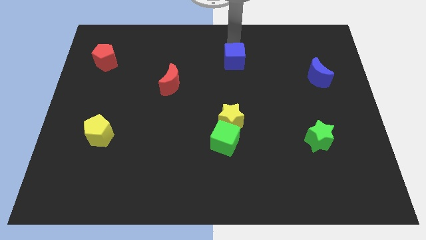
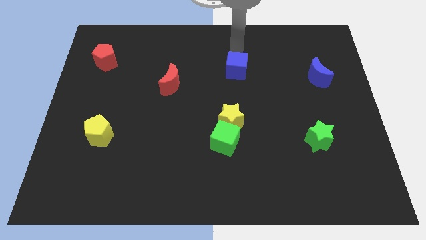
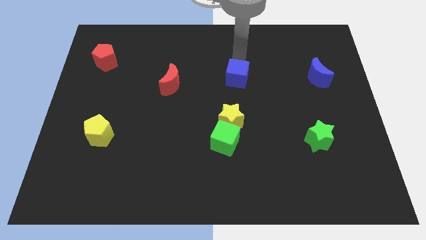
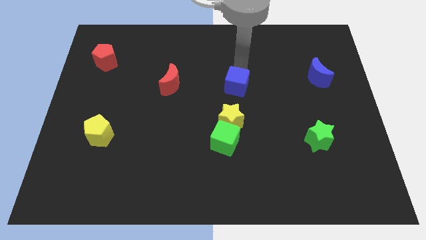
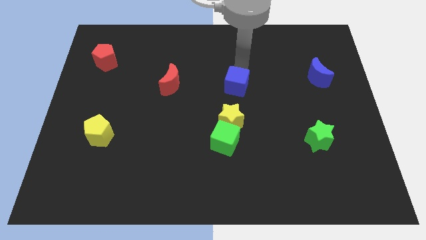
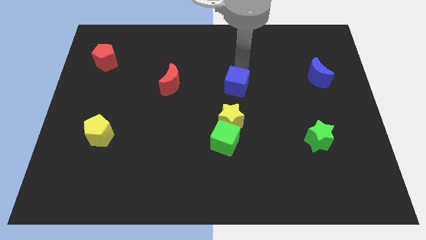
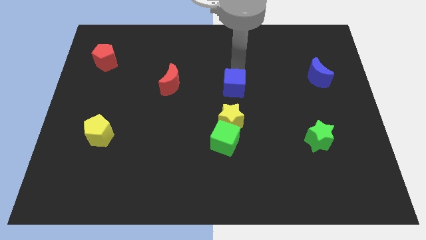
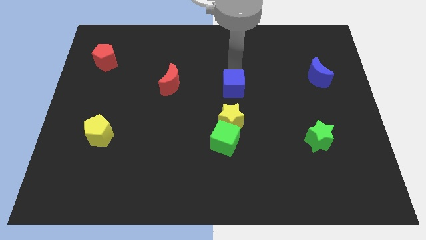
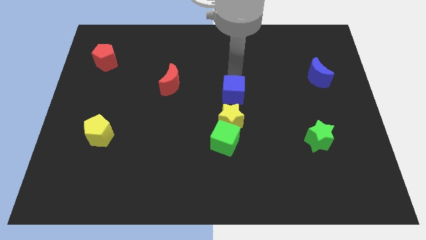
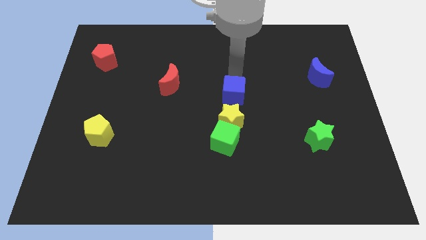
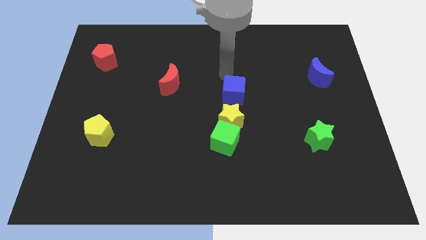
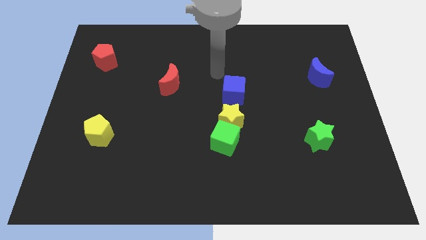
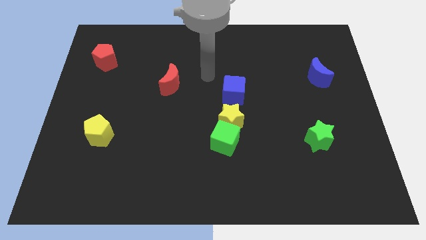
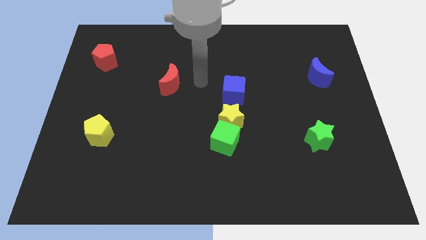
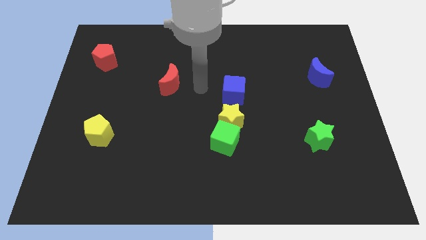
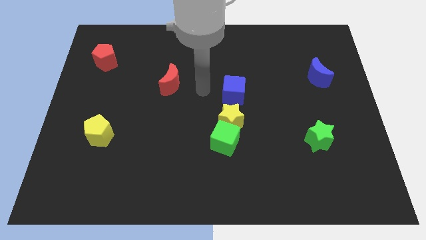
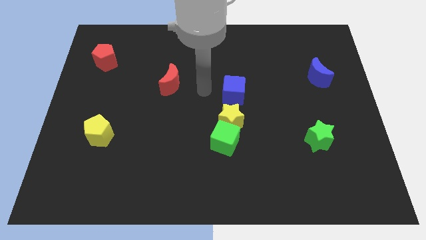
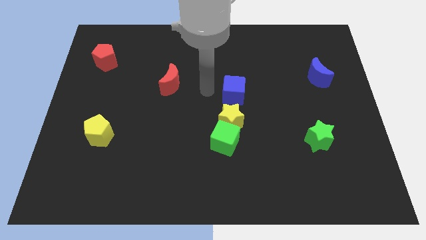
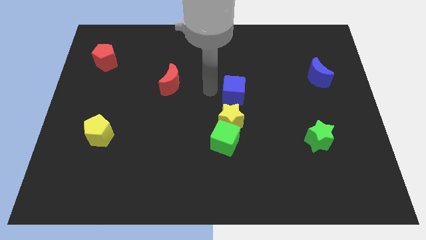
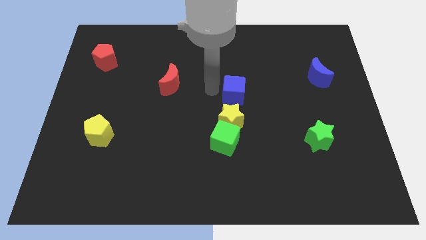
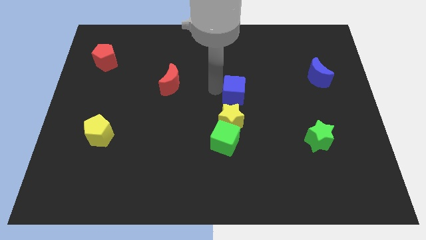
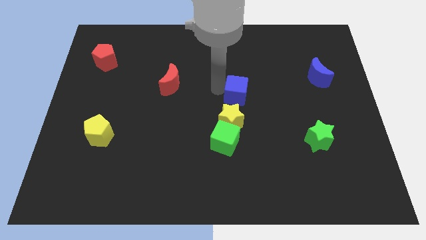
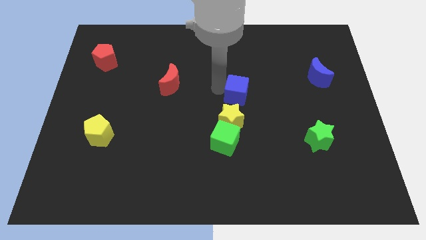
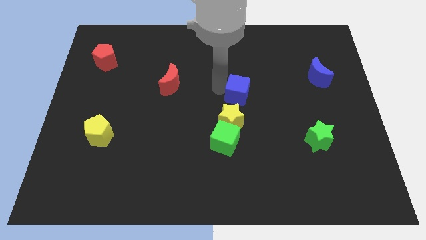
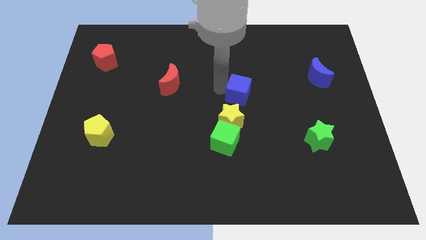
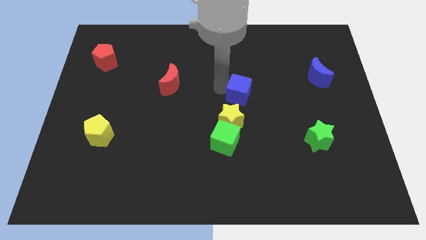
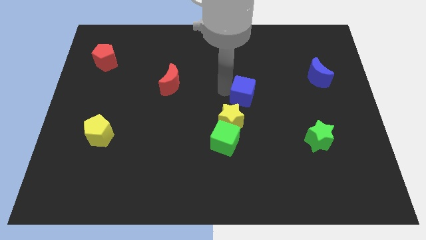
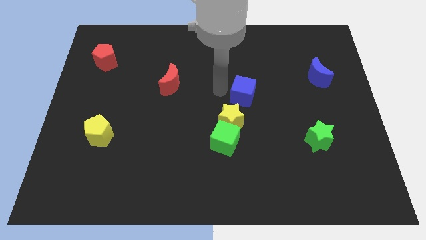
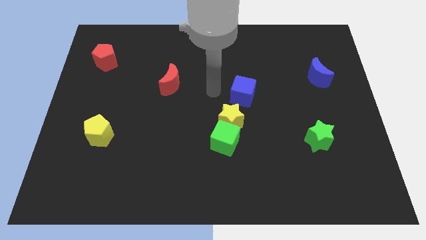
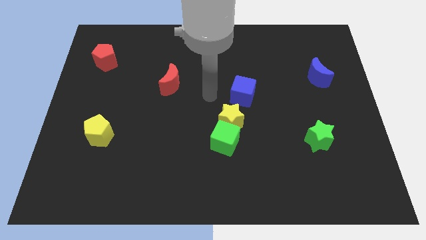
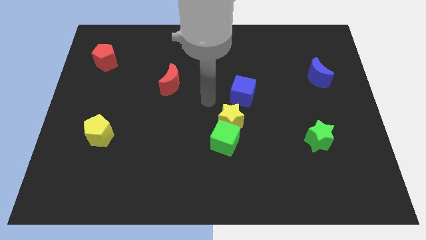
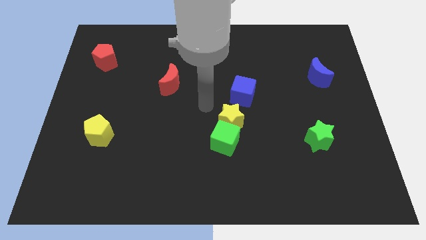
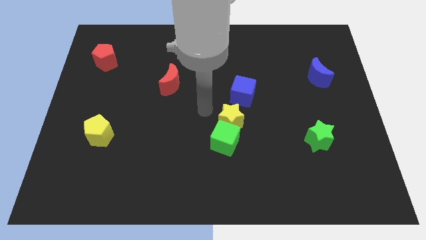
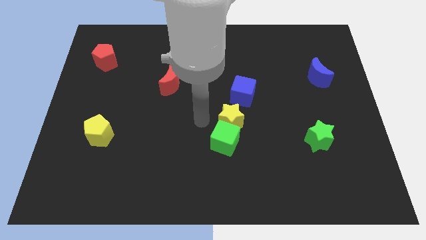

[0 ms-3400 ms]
place the blue cube on top of the yellow star

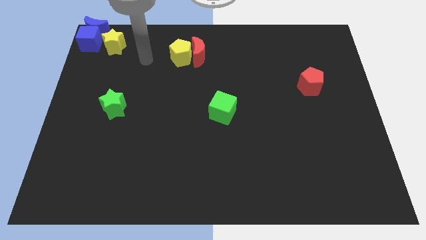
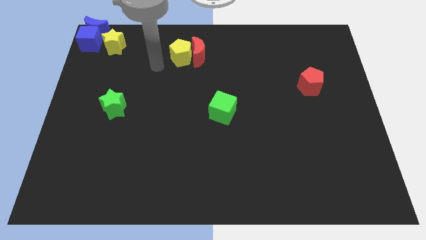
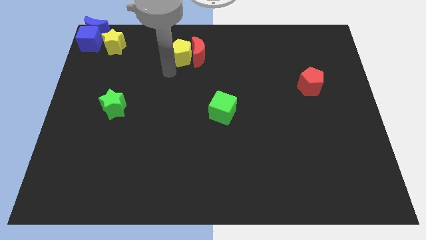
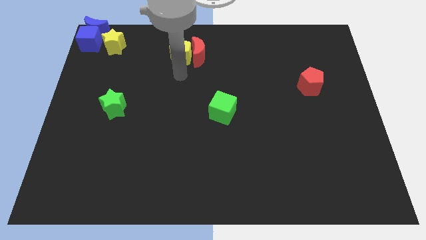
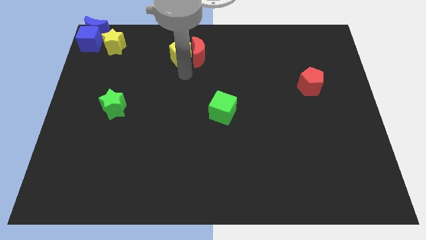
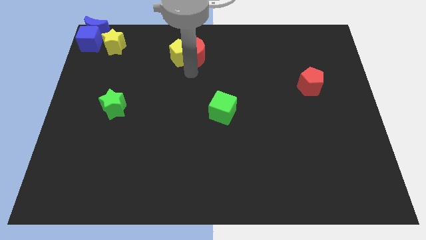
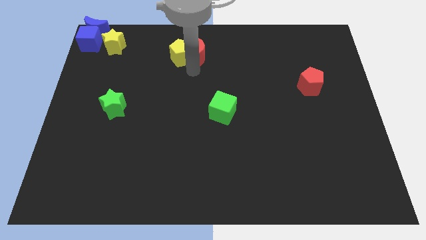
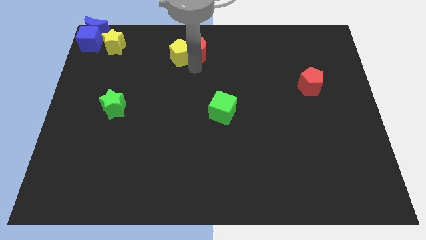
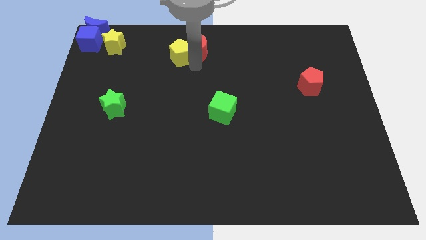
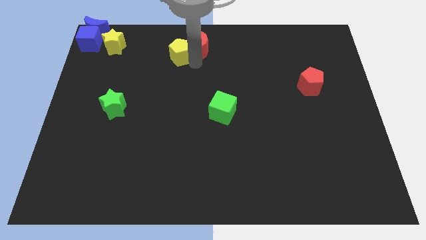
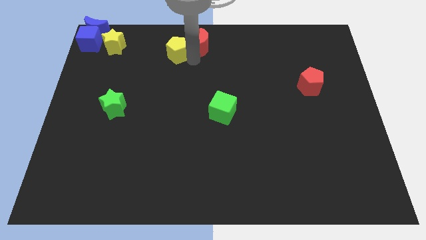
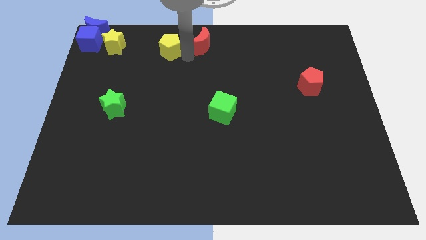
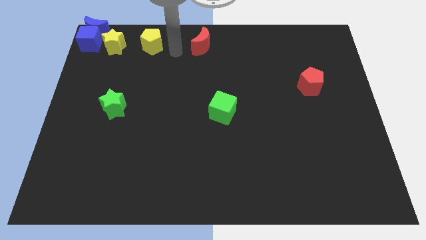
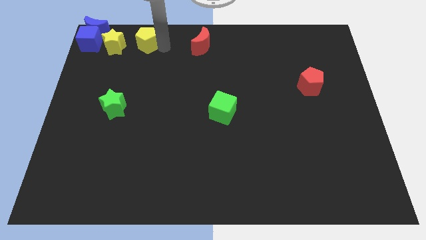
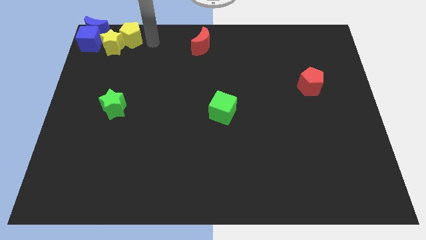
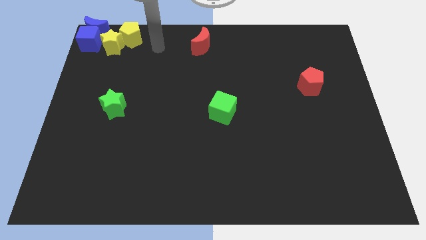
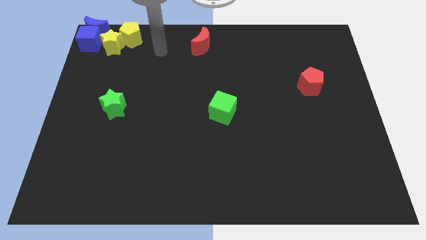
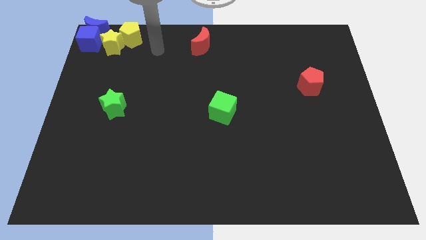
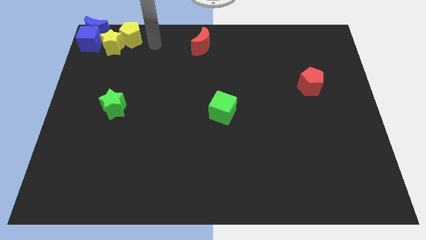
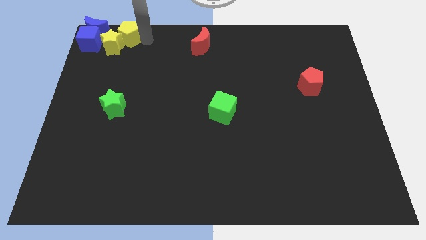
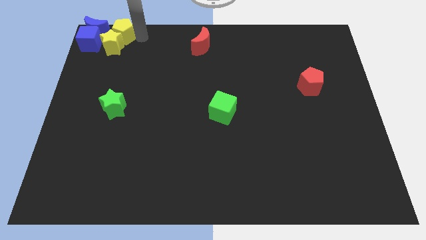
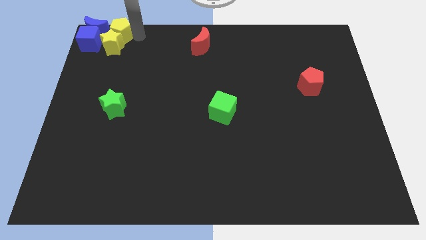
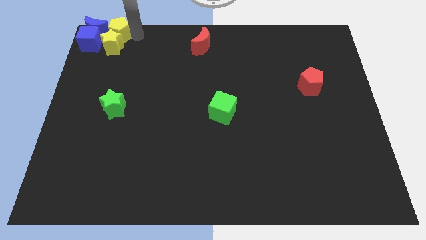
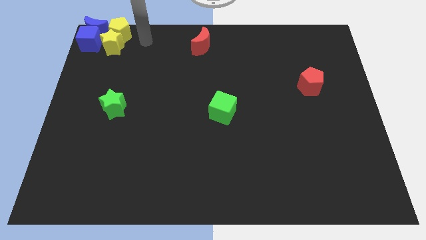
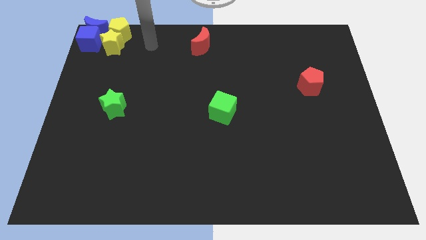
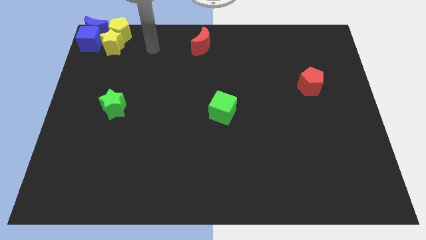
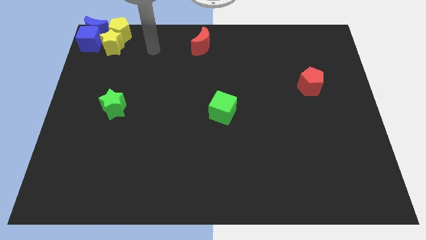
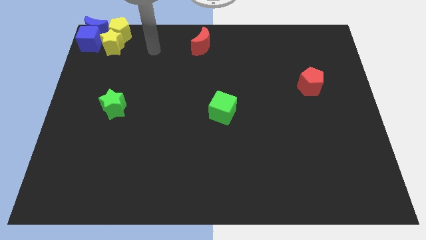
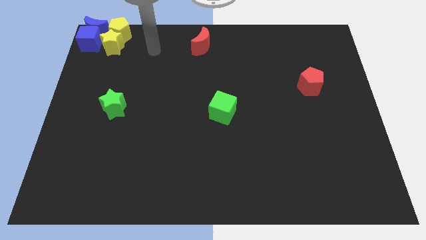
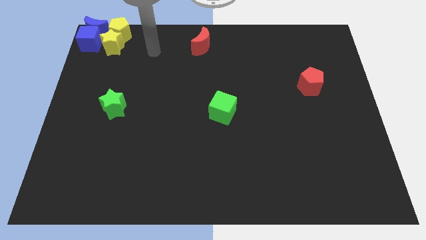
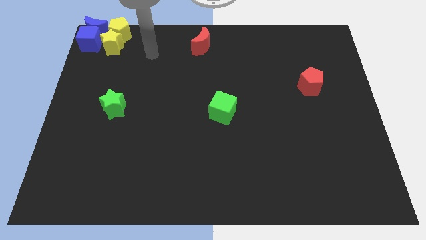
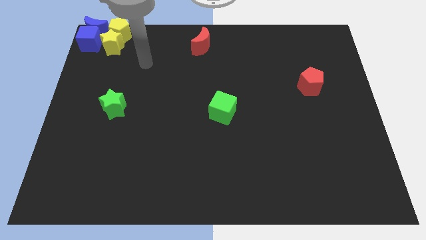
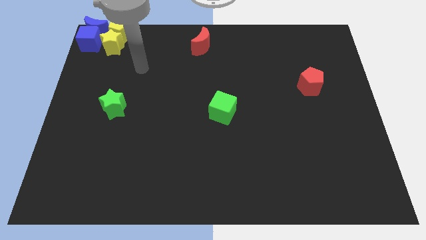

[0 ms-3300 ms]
push the yellow pentagon to the top of the yellow star

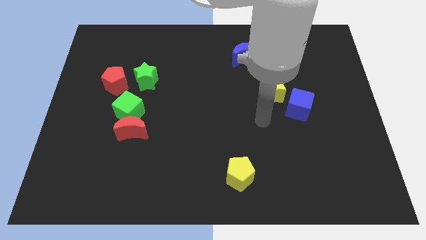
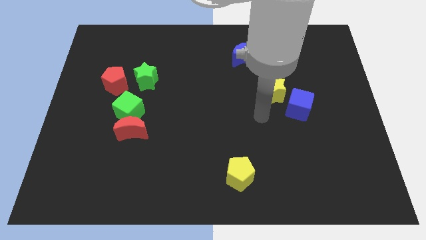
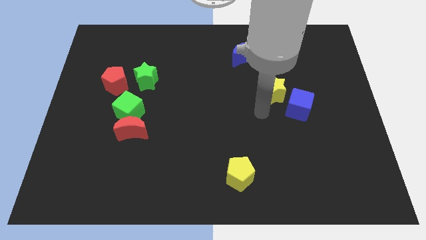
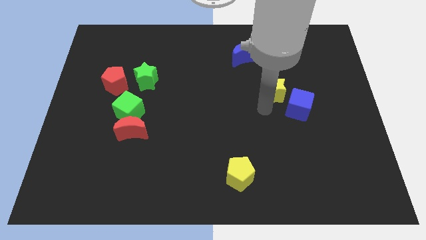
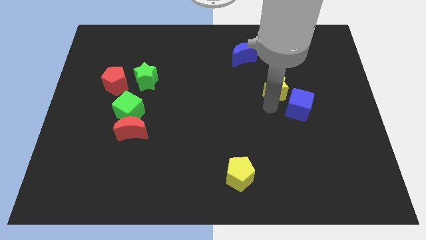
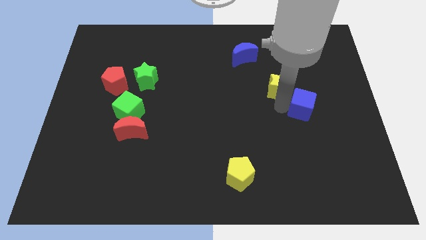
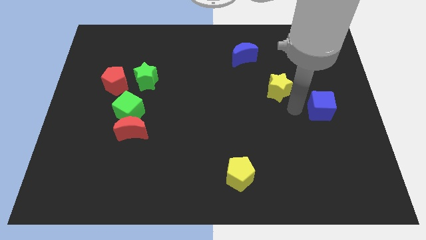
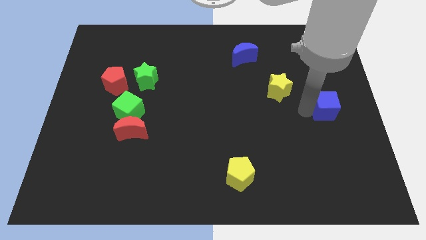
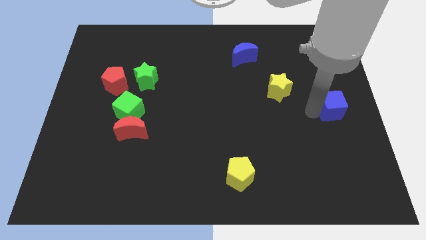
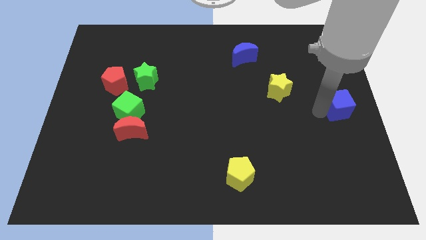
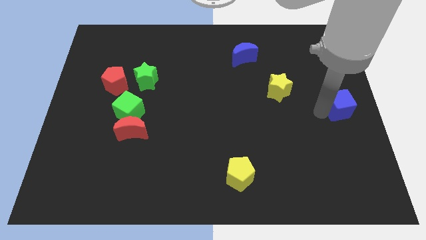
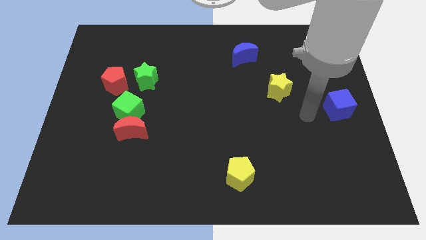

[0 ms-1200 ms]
move the blue cube towards the right center of the board

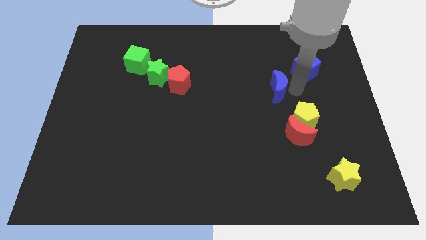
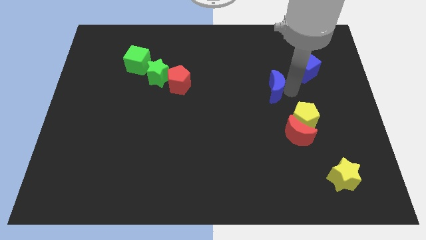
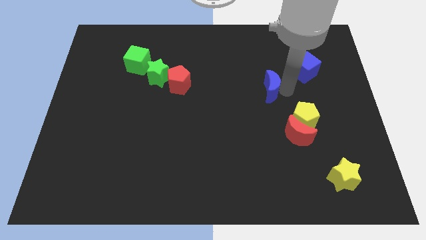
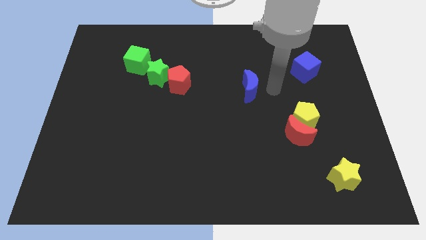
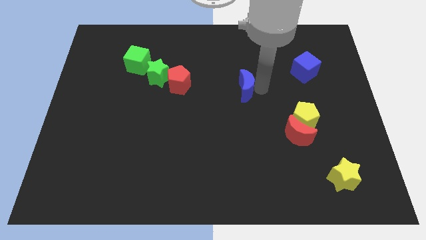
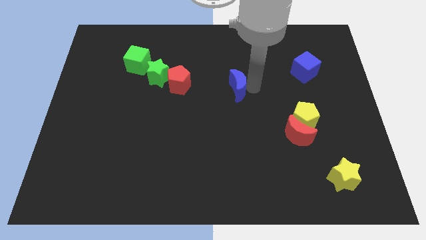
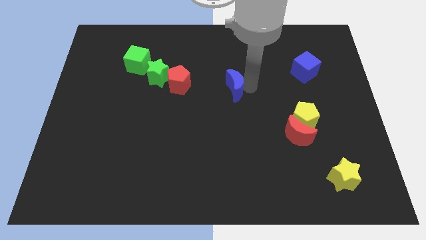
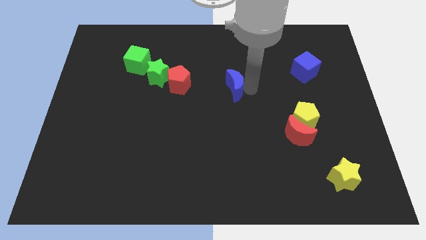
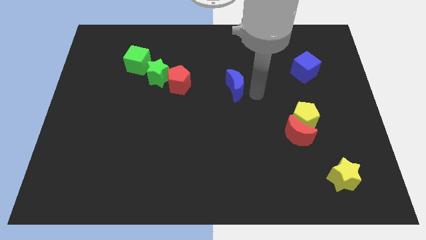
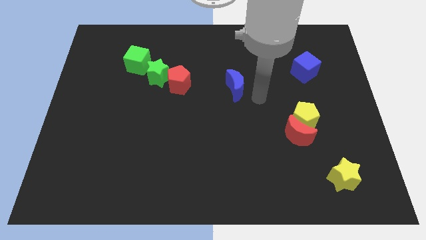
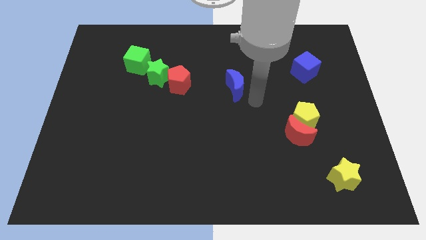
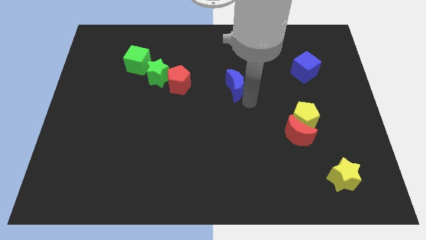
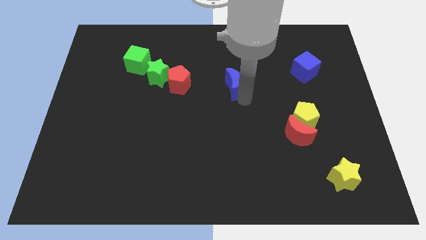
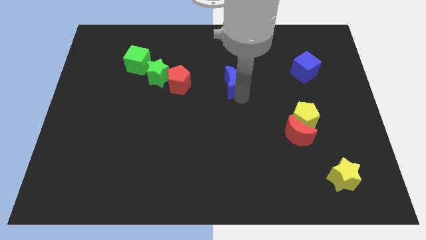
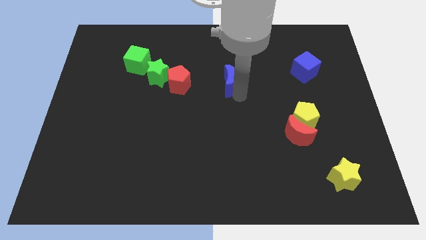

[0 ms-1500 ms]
place the blue crescent to the left side of the red pentagon
